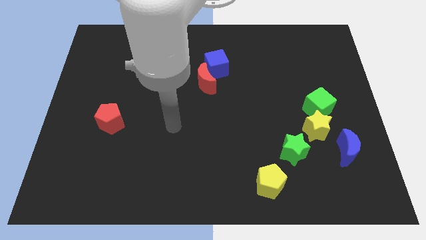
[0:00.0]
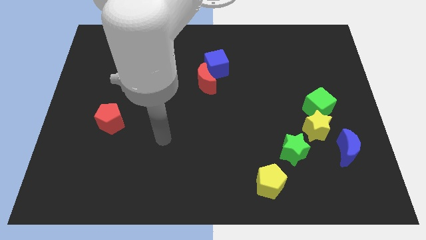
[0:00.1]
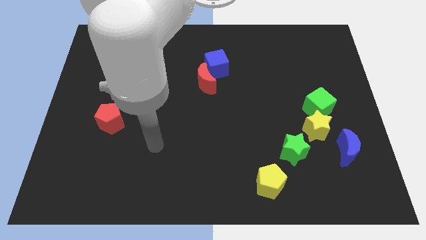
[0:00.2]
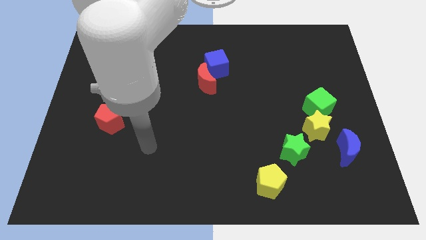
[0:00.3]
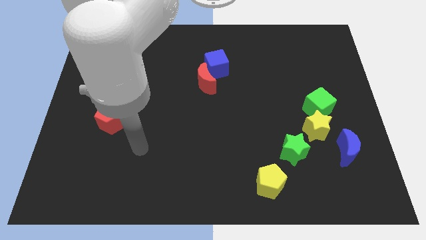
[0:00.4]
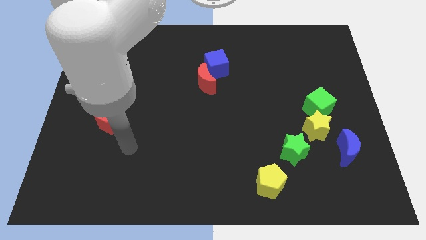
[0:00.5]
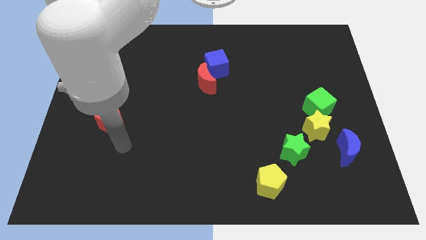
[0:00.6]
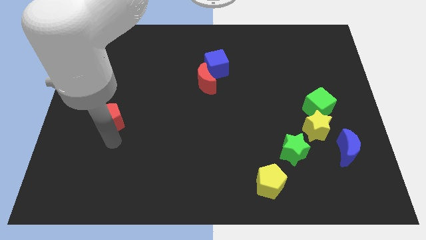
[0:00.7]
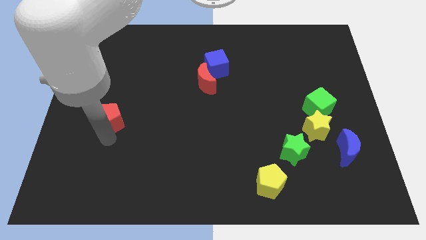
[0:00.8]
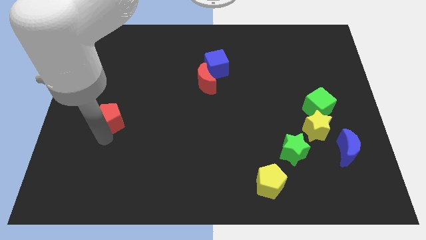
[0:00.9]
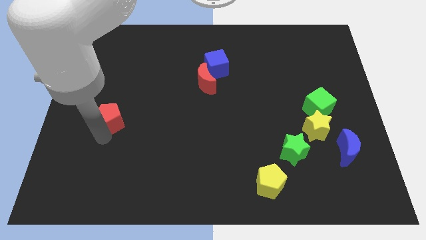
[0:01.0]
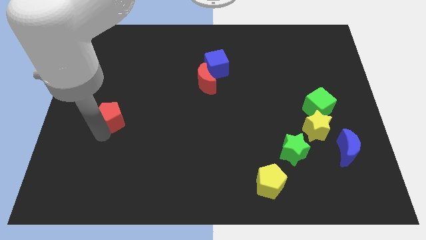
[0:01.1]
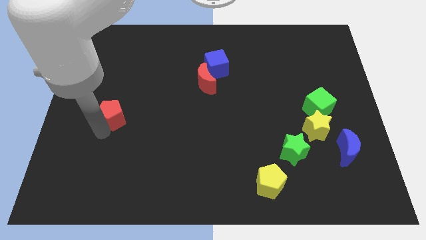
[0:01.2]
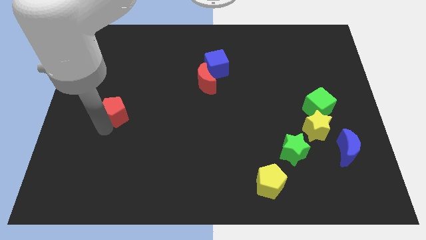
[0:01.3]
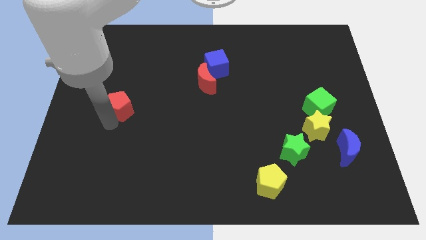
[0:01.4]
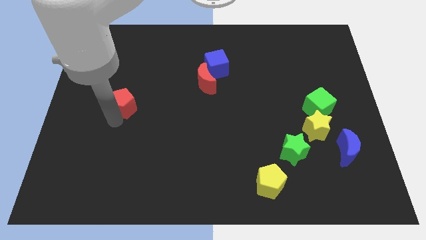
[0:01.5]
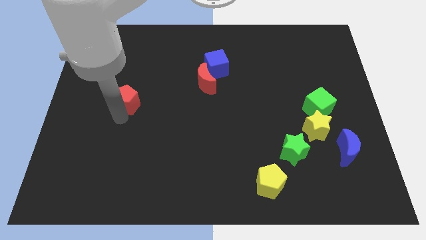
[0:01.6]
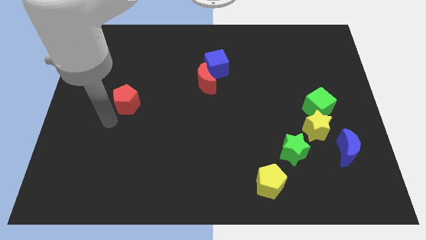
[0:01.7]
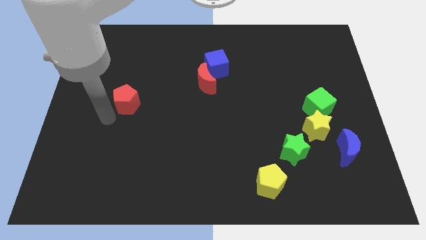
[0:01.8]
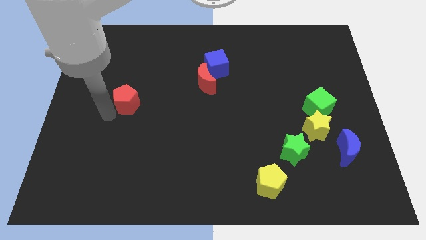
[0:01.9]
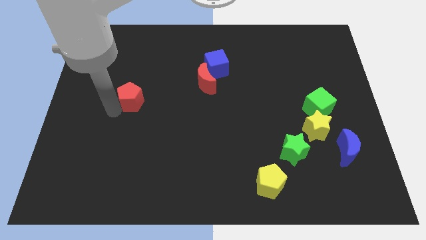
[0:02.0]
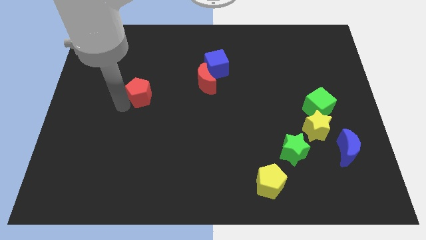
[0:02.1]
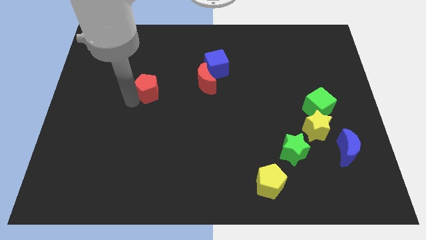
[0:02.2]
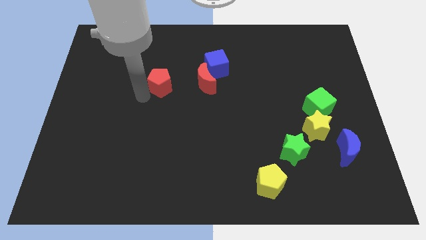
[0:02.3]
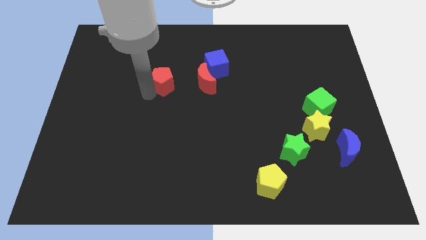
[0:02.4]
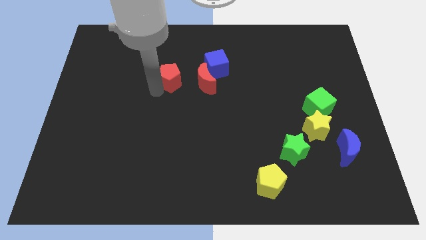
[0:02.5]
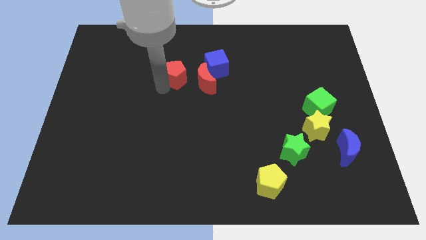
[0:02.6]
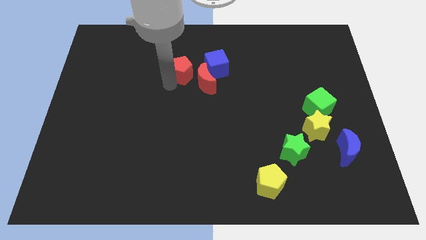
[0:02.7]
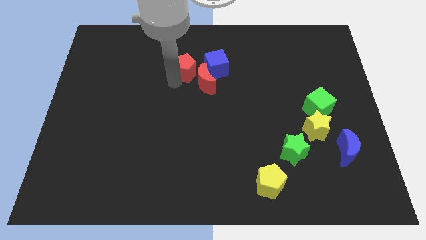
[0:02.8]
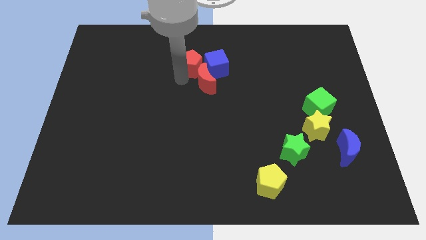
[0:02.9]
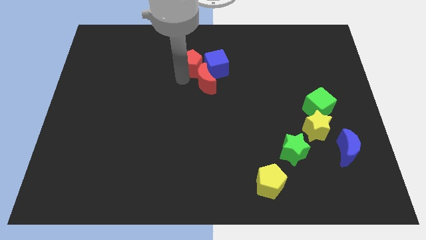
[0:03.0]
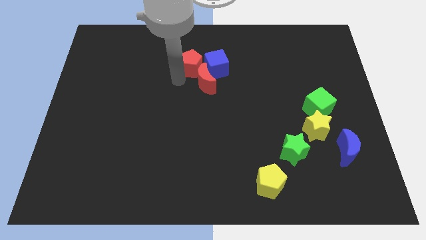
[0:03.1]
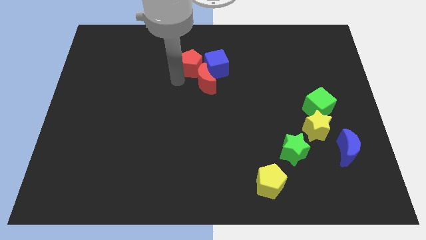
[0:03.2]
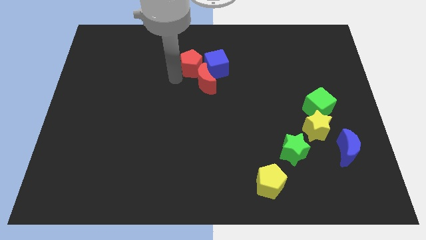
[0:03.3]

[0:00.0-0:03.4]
place the red pentagon left to the blue cube

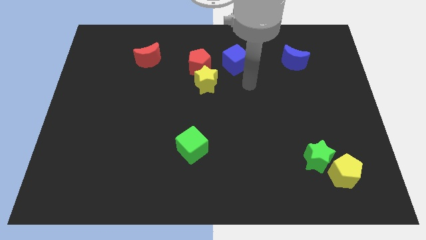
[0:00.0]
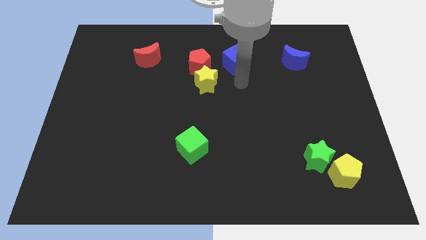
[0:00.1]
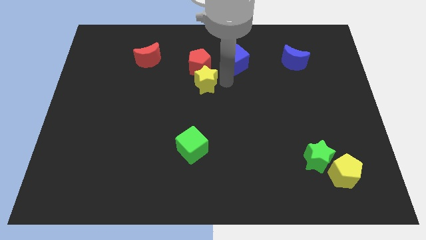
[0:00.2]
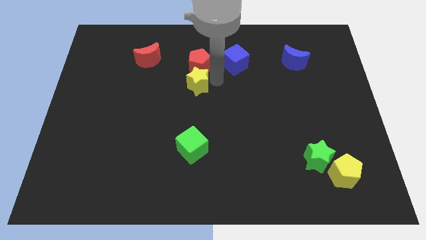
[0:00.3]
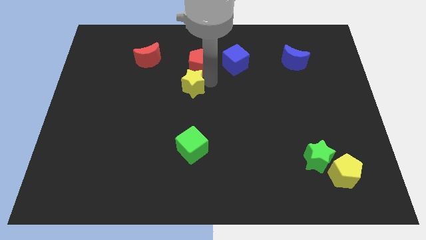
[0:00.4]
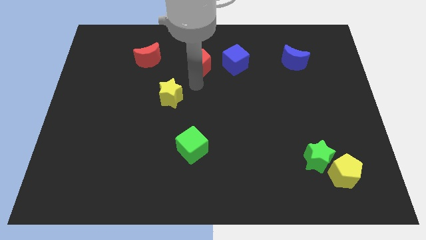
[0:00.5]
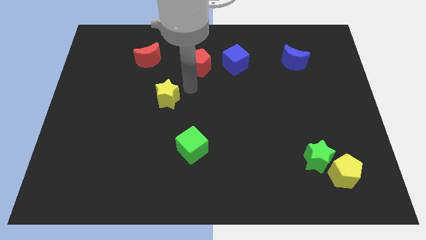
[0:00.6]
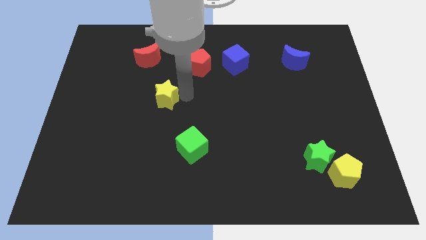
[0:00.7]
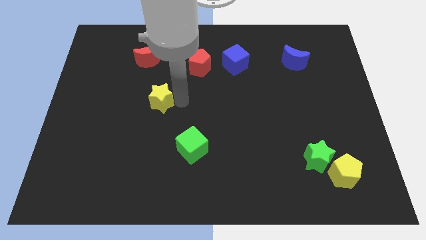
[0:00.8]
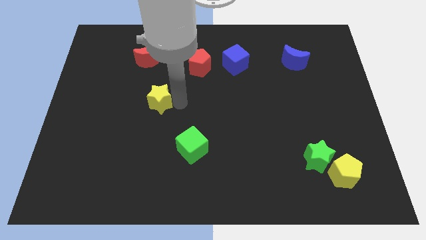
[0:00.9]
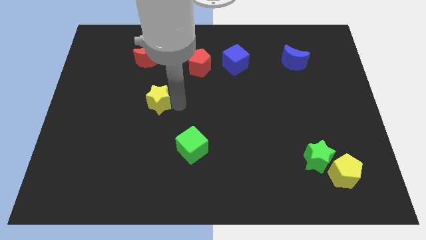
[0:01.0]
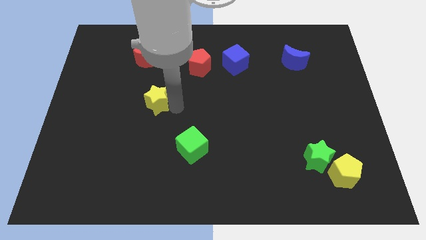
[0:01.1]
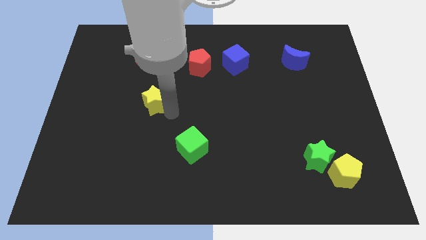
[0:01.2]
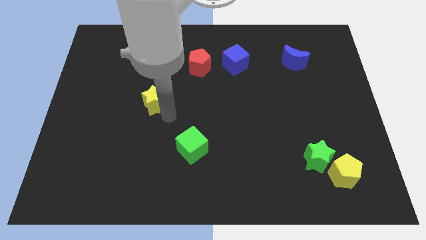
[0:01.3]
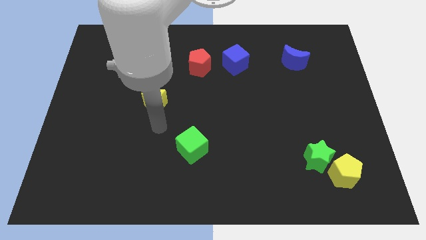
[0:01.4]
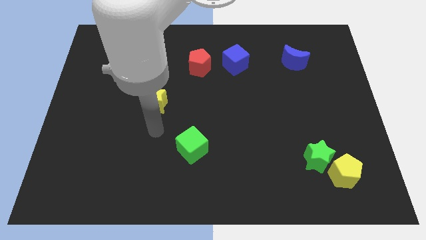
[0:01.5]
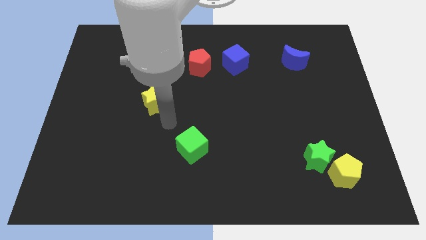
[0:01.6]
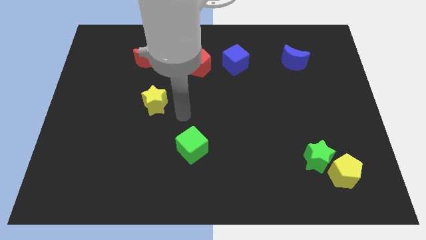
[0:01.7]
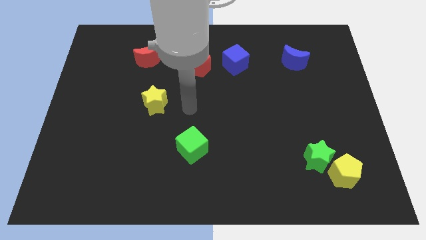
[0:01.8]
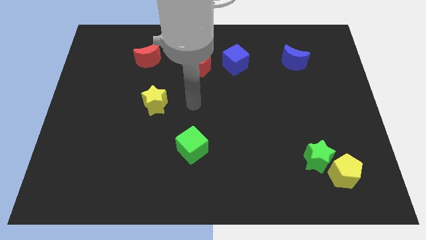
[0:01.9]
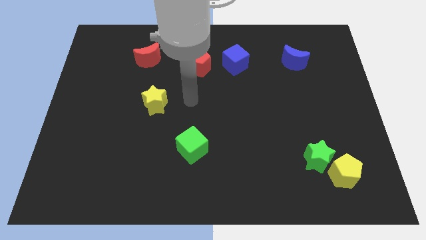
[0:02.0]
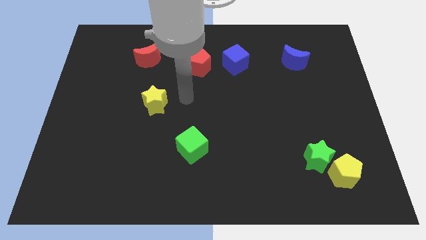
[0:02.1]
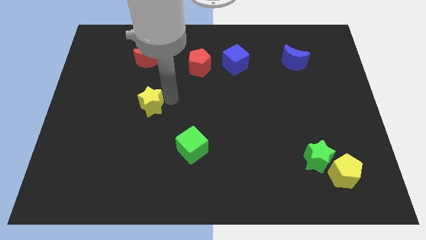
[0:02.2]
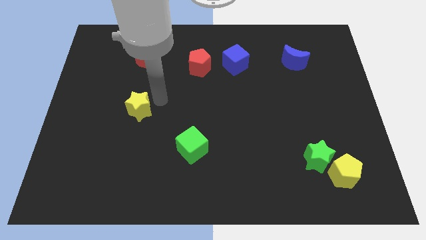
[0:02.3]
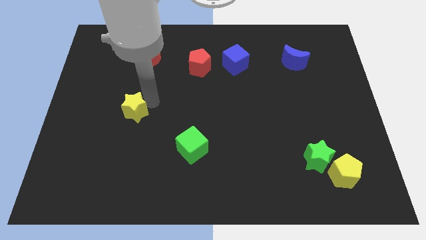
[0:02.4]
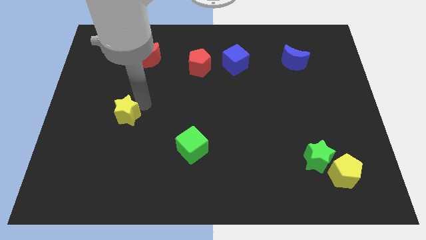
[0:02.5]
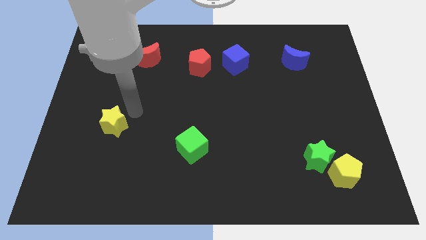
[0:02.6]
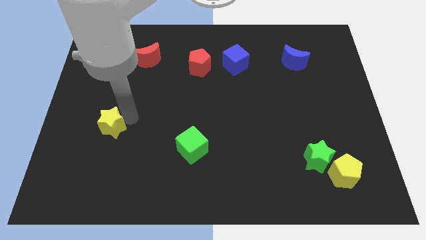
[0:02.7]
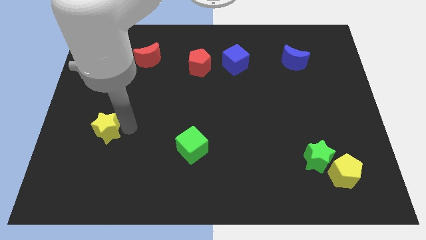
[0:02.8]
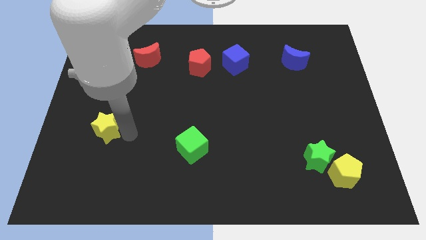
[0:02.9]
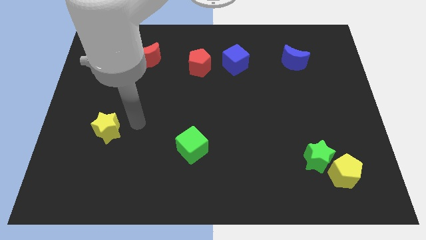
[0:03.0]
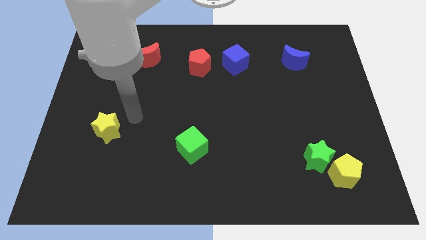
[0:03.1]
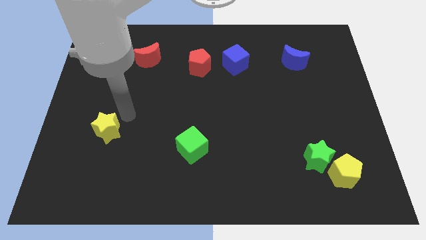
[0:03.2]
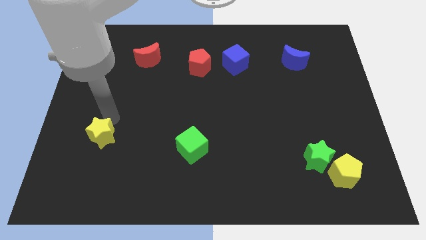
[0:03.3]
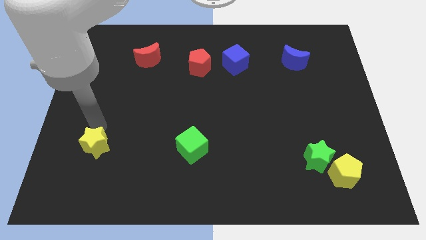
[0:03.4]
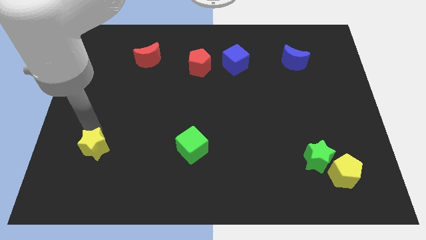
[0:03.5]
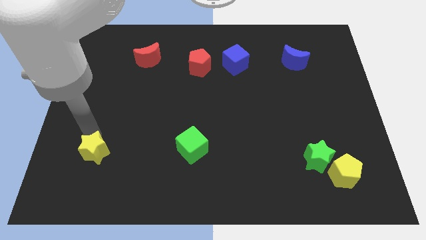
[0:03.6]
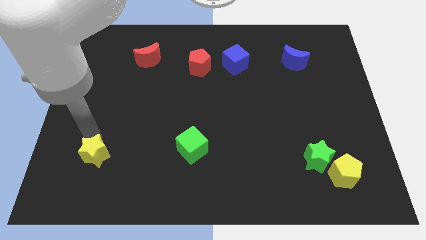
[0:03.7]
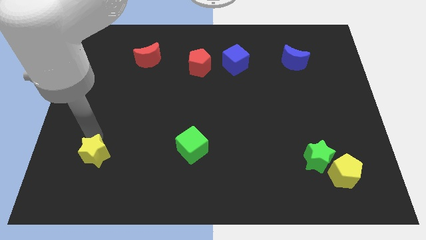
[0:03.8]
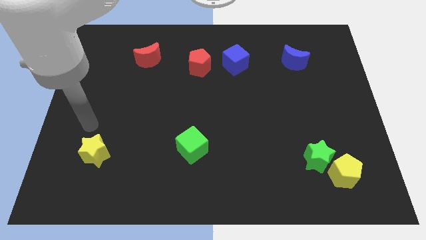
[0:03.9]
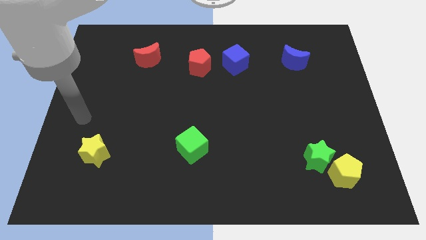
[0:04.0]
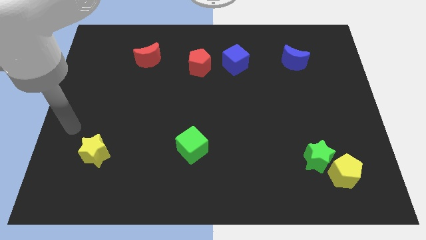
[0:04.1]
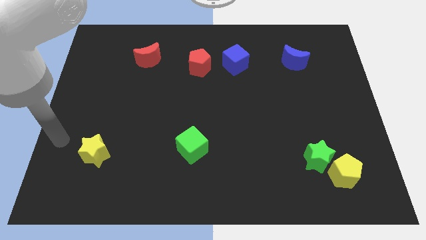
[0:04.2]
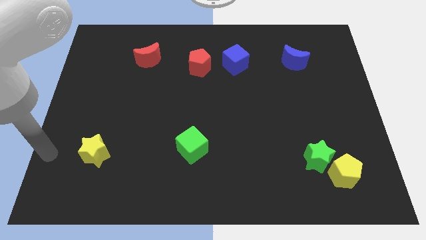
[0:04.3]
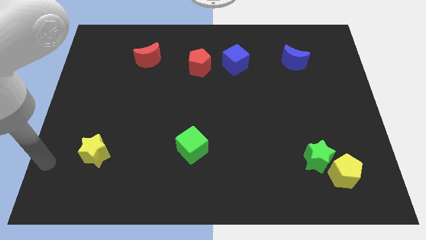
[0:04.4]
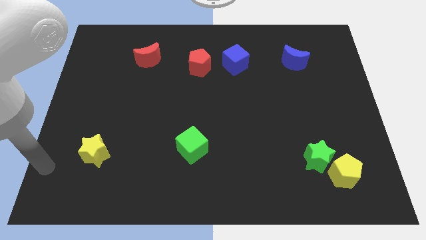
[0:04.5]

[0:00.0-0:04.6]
push the yellow star parallel to the green cube

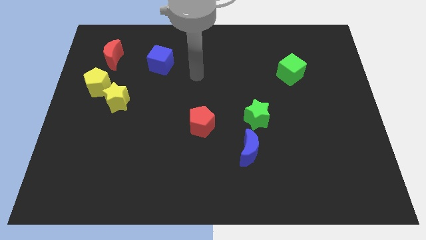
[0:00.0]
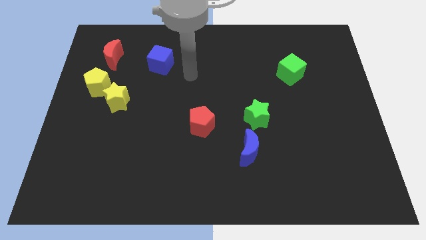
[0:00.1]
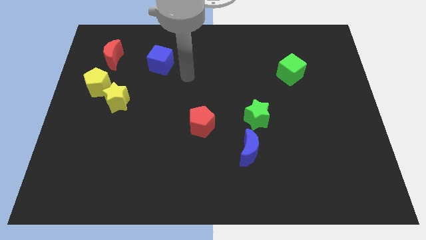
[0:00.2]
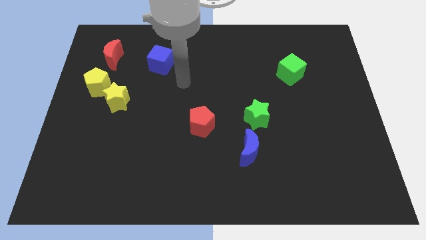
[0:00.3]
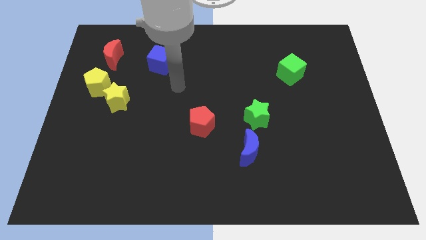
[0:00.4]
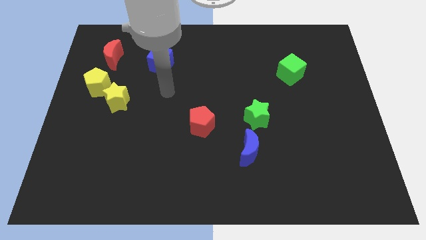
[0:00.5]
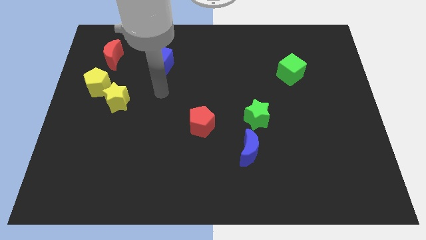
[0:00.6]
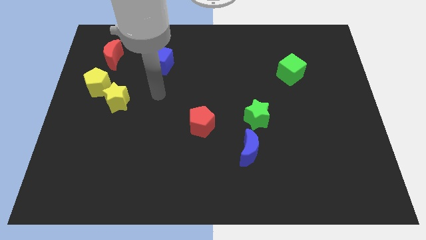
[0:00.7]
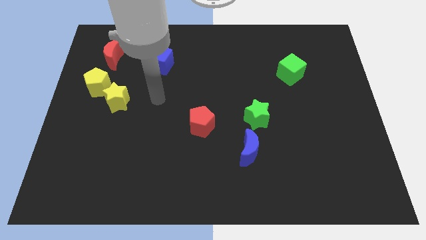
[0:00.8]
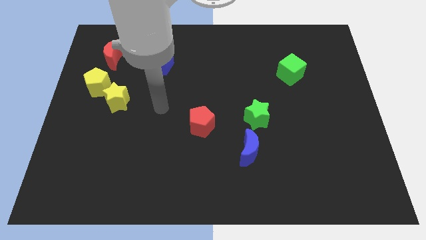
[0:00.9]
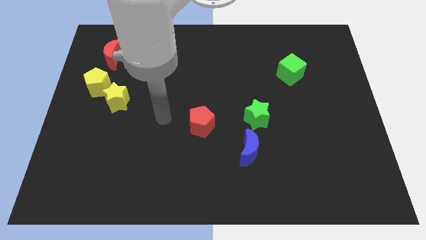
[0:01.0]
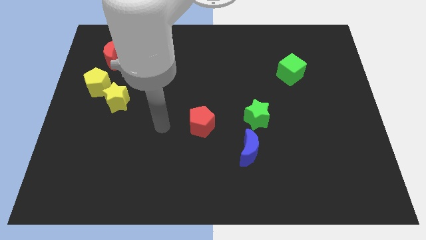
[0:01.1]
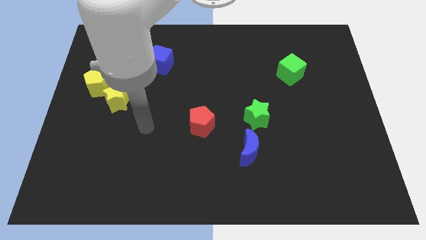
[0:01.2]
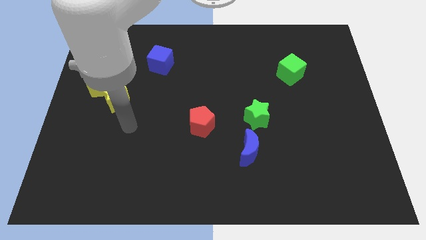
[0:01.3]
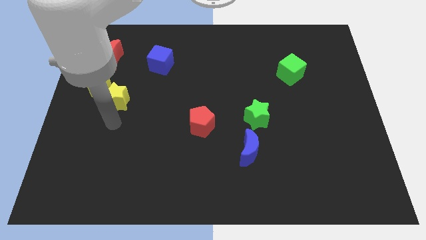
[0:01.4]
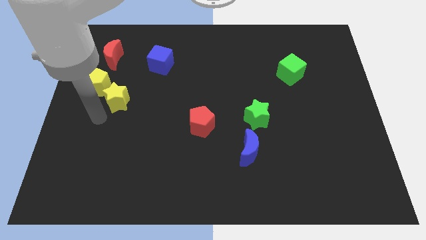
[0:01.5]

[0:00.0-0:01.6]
move your arm towards the yellow star
